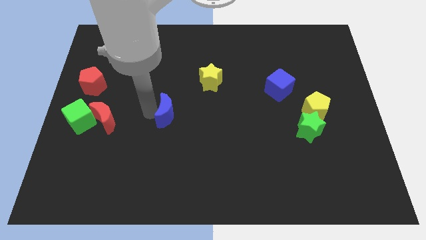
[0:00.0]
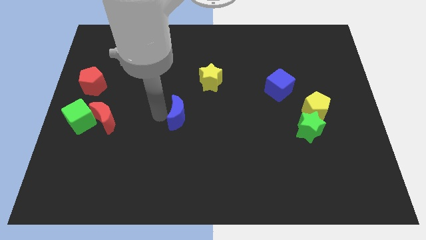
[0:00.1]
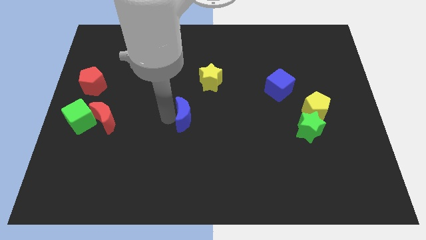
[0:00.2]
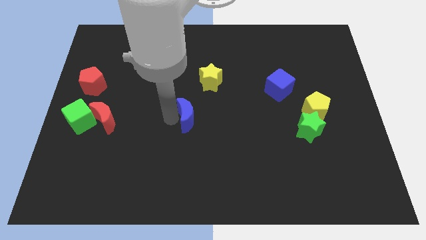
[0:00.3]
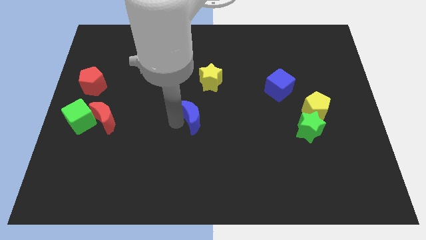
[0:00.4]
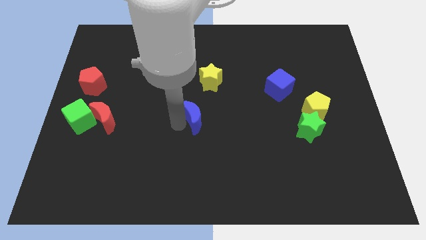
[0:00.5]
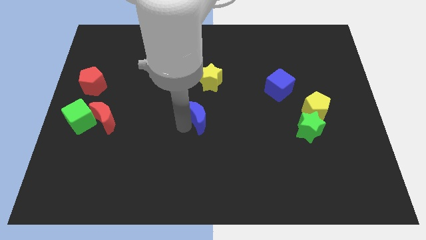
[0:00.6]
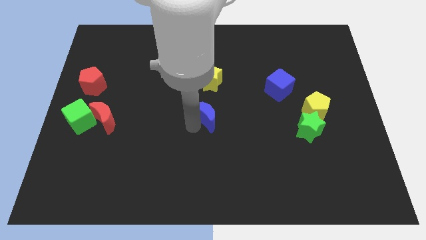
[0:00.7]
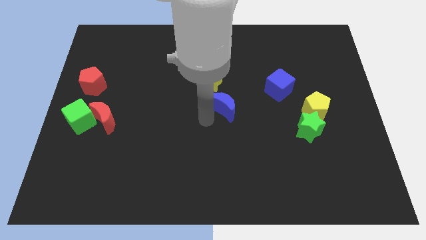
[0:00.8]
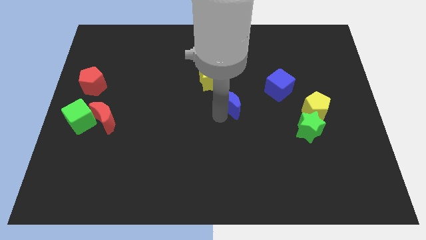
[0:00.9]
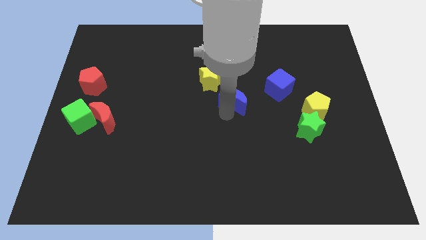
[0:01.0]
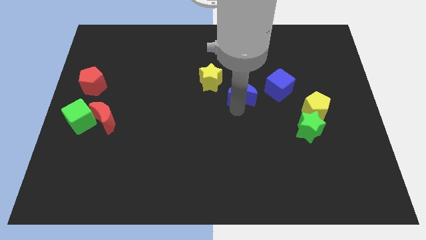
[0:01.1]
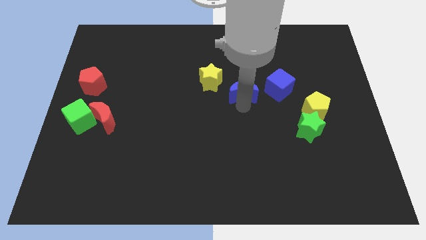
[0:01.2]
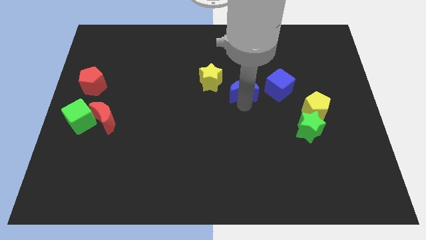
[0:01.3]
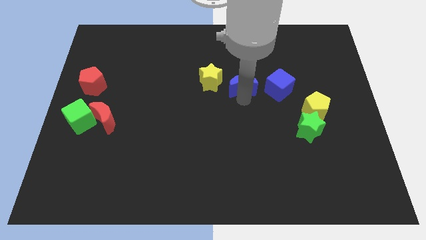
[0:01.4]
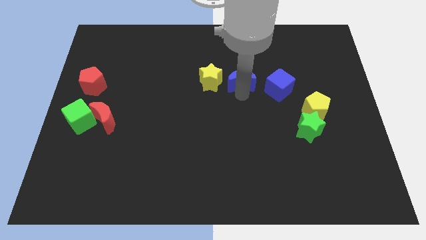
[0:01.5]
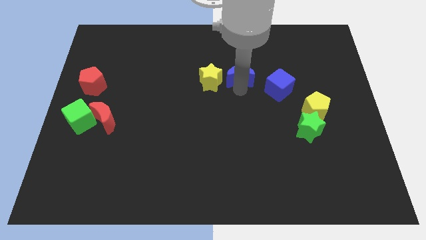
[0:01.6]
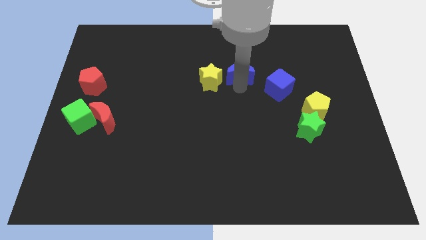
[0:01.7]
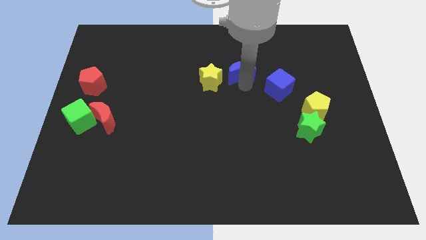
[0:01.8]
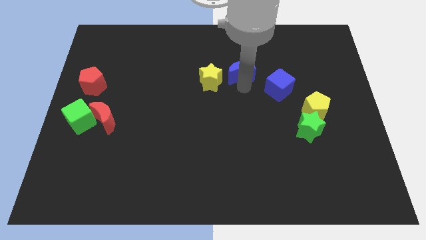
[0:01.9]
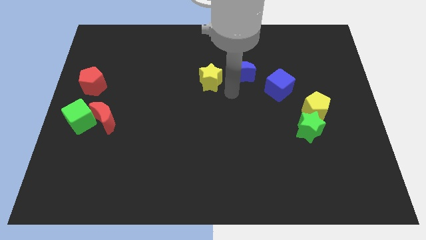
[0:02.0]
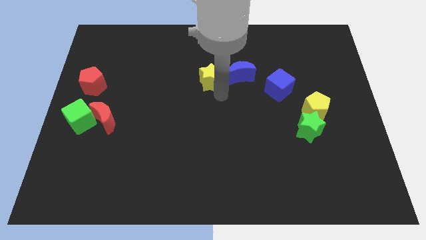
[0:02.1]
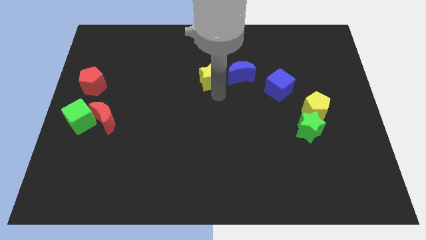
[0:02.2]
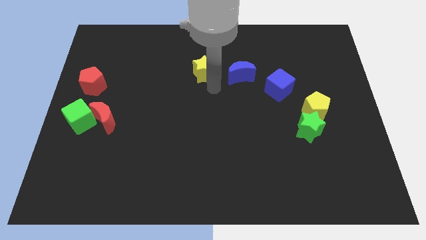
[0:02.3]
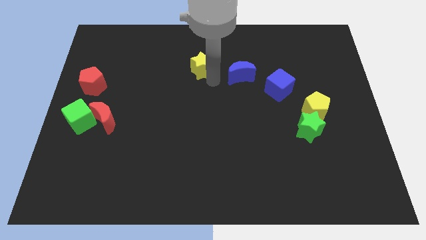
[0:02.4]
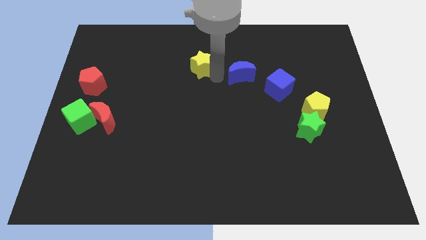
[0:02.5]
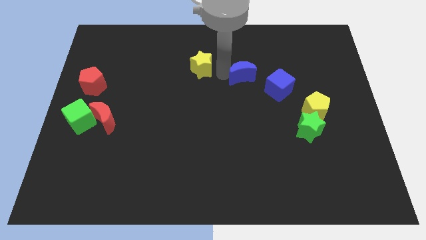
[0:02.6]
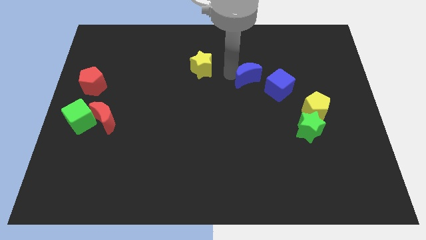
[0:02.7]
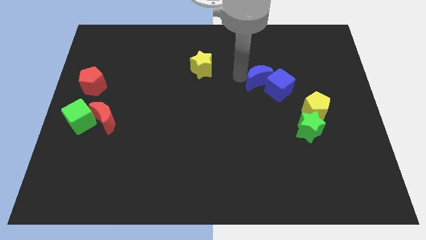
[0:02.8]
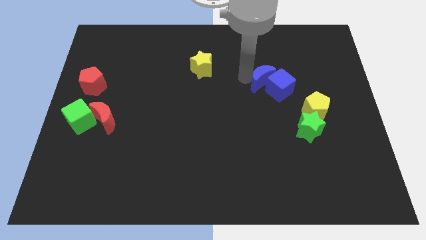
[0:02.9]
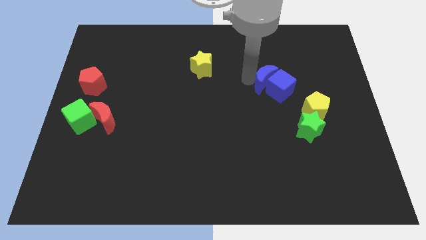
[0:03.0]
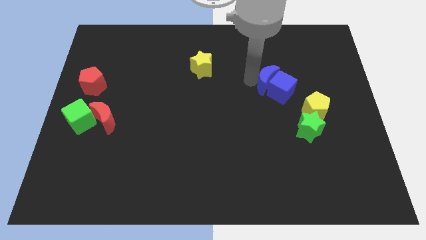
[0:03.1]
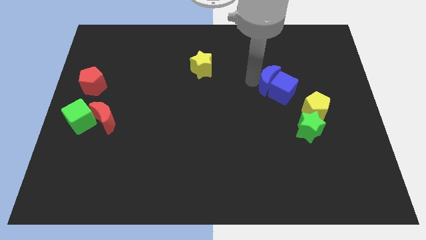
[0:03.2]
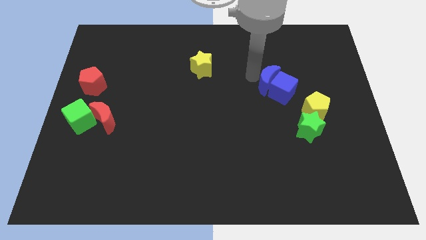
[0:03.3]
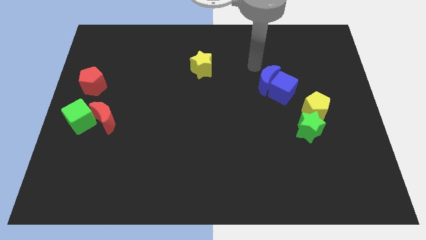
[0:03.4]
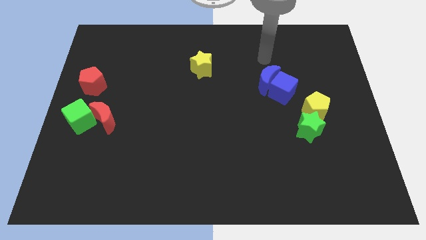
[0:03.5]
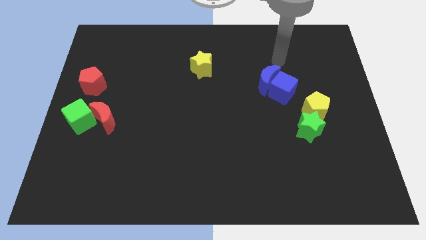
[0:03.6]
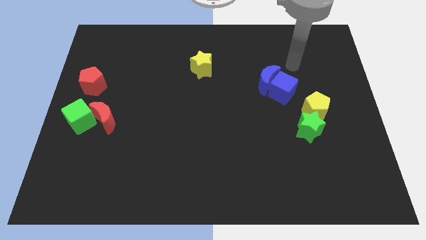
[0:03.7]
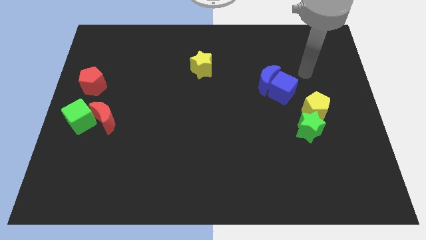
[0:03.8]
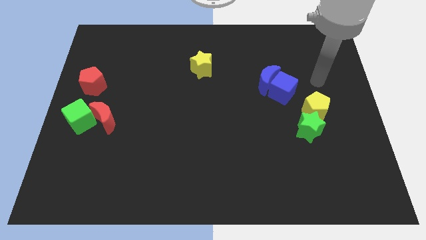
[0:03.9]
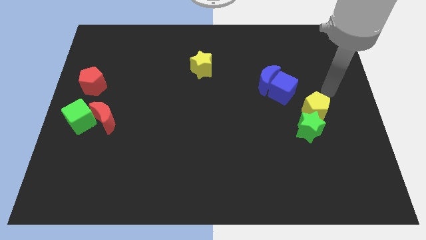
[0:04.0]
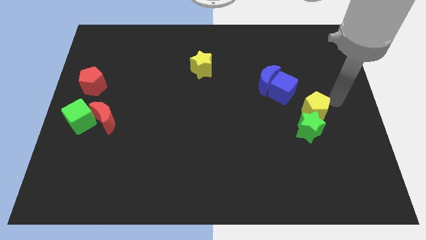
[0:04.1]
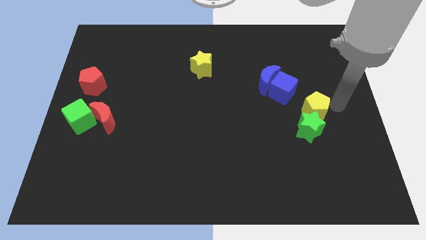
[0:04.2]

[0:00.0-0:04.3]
move the blue moon into the blue cube

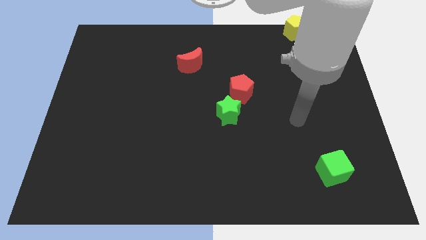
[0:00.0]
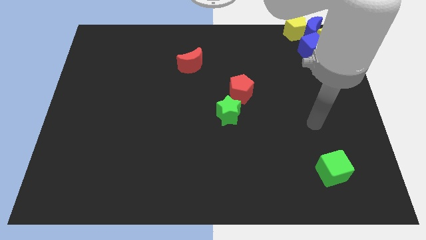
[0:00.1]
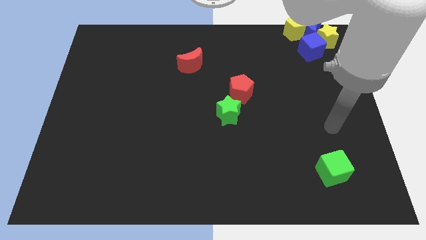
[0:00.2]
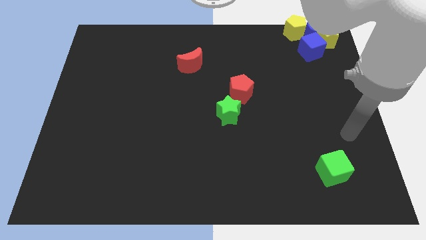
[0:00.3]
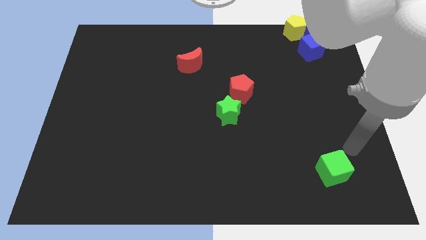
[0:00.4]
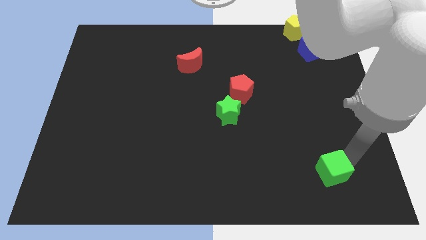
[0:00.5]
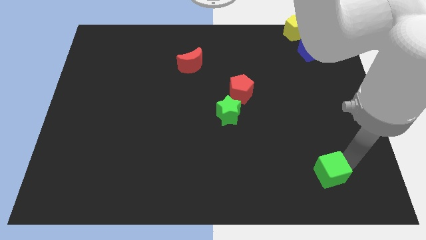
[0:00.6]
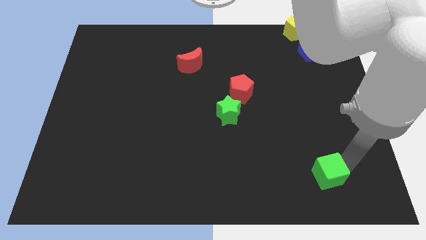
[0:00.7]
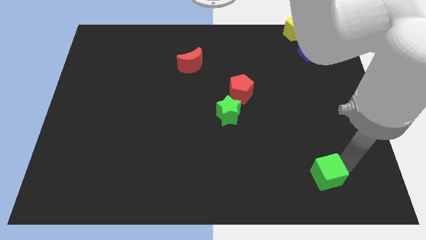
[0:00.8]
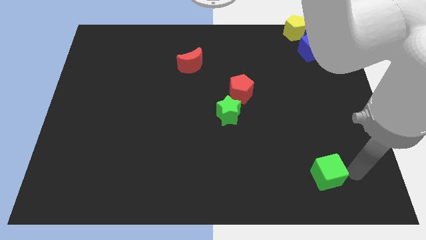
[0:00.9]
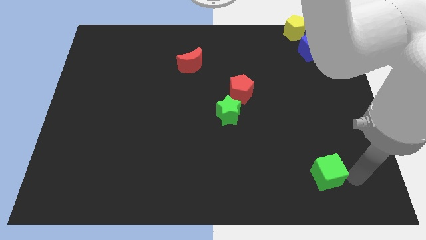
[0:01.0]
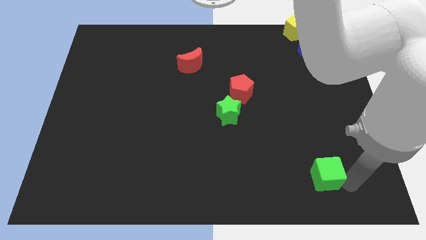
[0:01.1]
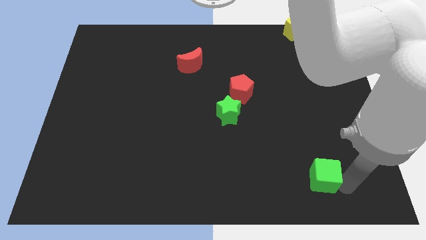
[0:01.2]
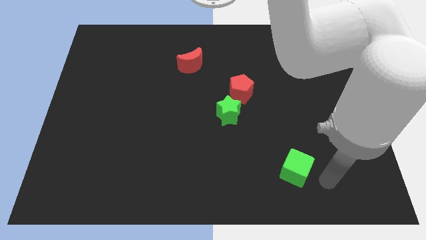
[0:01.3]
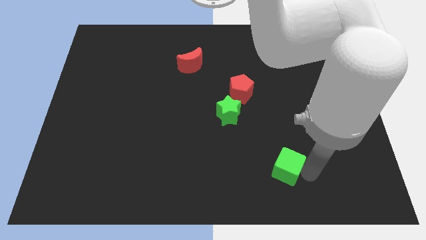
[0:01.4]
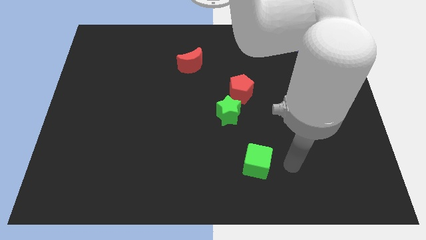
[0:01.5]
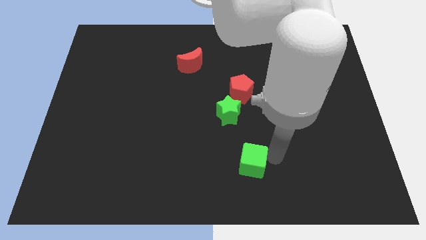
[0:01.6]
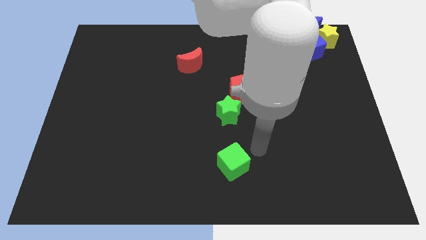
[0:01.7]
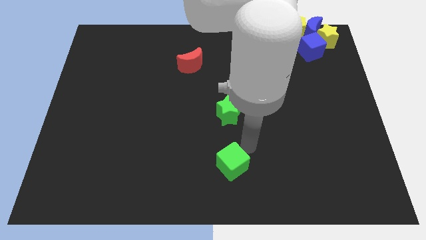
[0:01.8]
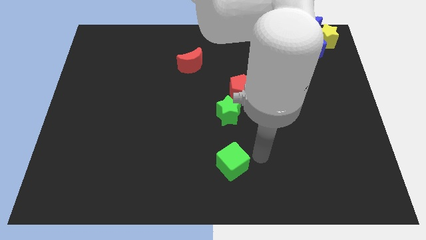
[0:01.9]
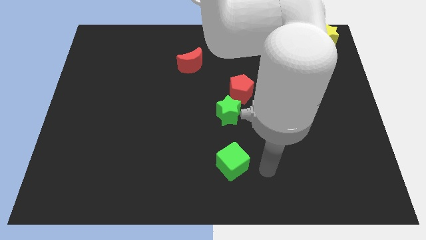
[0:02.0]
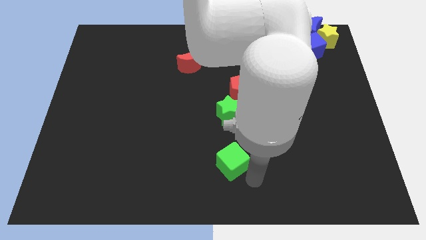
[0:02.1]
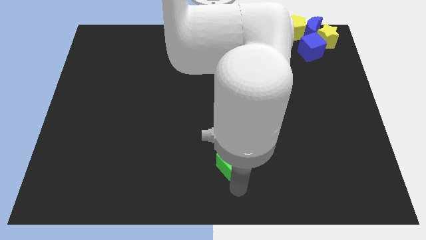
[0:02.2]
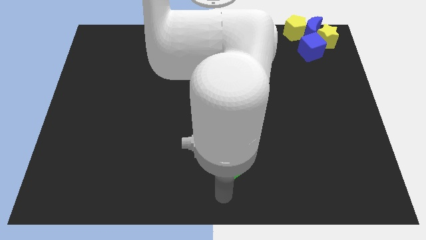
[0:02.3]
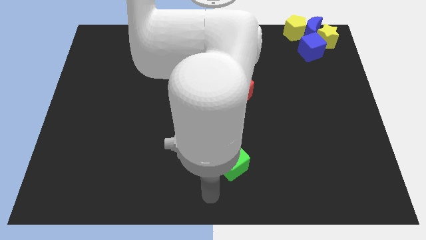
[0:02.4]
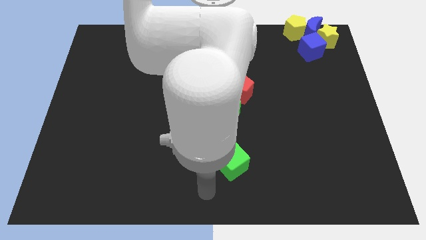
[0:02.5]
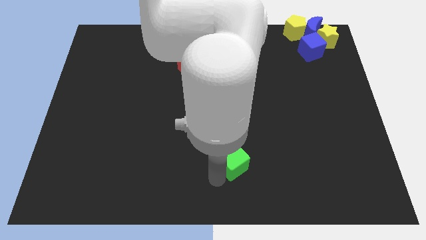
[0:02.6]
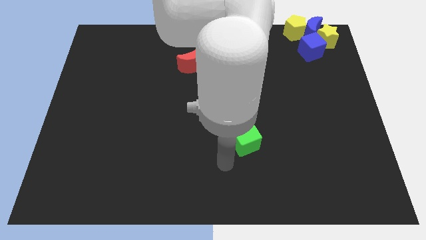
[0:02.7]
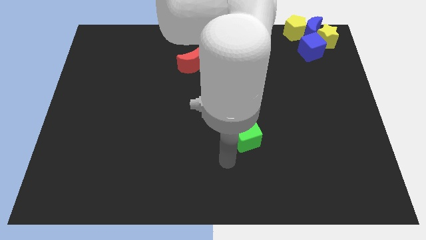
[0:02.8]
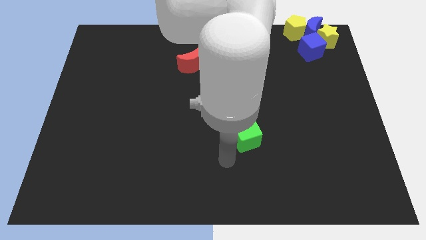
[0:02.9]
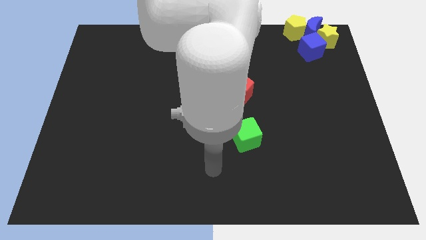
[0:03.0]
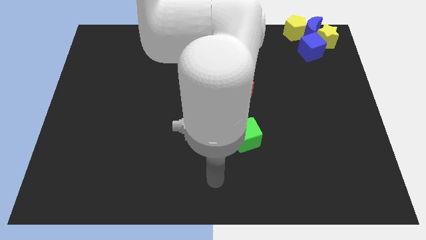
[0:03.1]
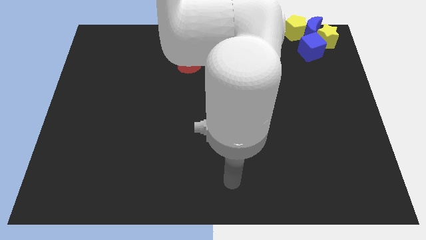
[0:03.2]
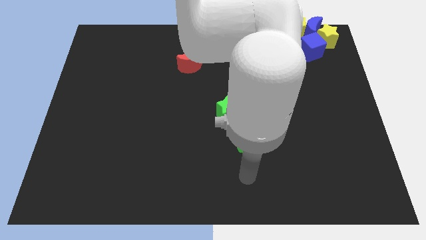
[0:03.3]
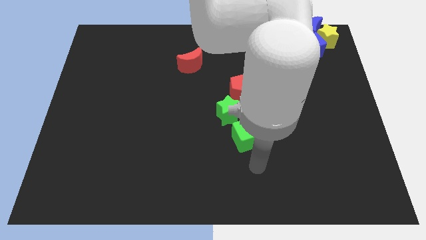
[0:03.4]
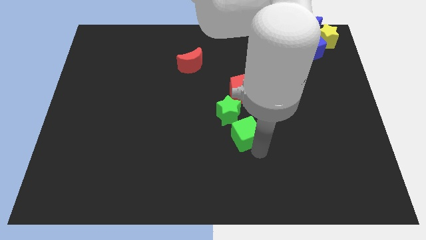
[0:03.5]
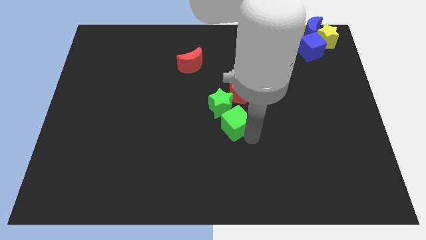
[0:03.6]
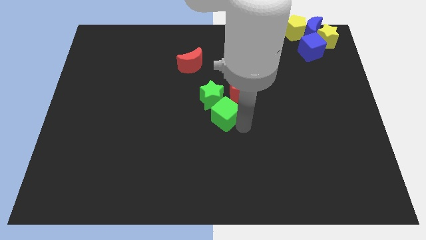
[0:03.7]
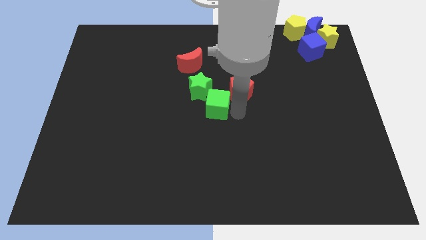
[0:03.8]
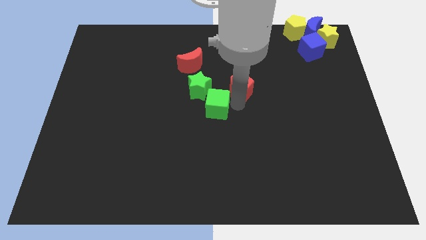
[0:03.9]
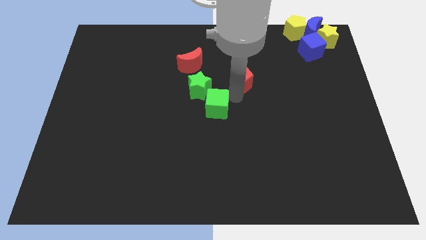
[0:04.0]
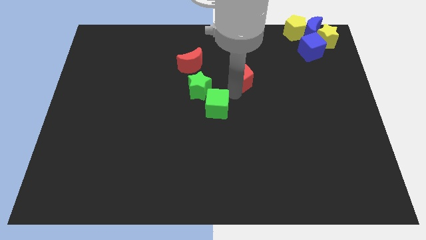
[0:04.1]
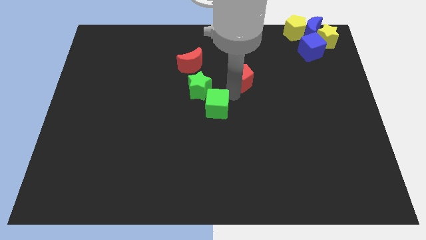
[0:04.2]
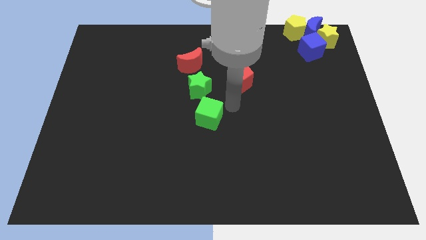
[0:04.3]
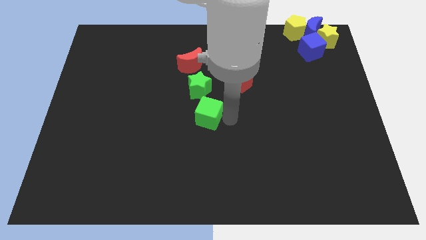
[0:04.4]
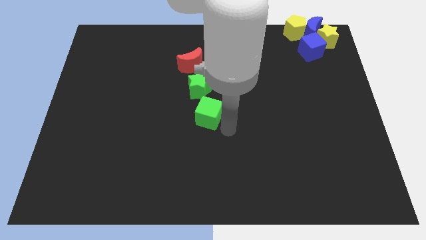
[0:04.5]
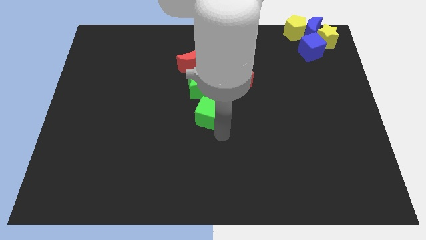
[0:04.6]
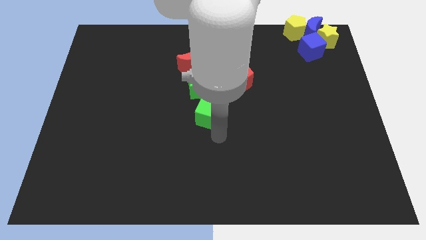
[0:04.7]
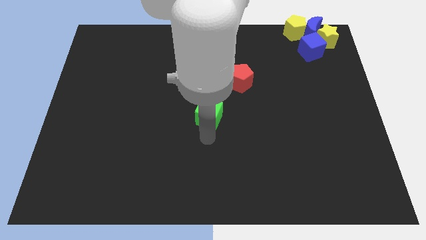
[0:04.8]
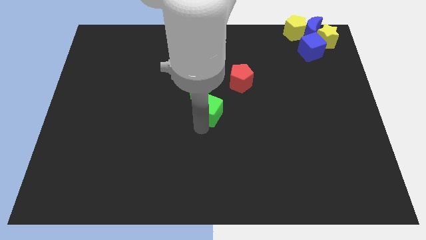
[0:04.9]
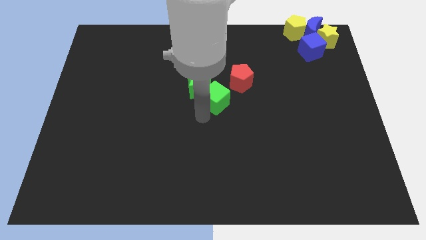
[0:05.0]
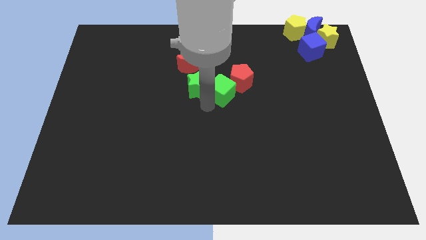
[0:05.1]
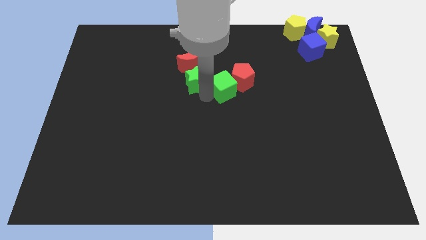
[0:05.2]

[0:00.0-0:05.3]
attach the green cube to the red pentagon
